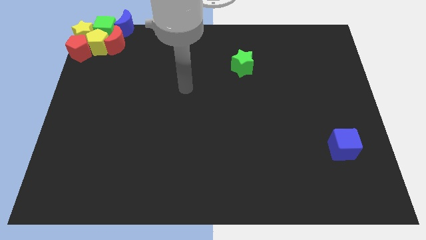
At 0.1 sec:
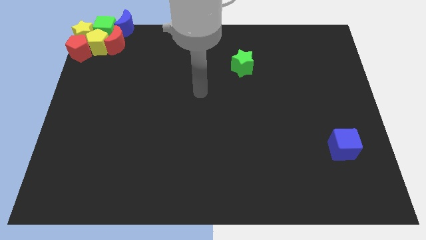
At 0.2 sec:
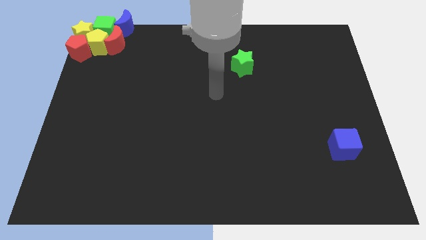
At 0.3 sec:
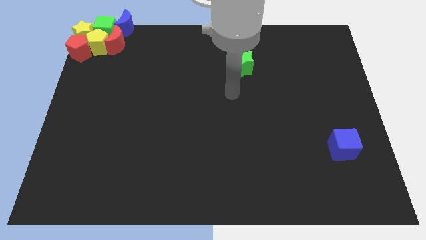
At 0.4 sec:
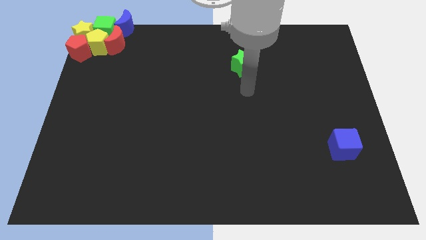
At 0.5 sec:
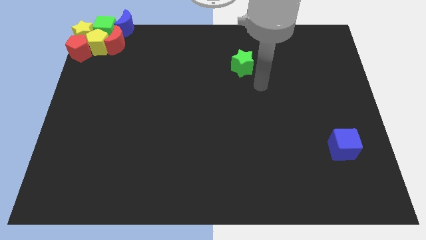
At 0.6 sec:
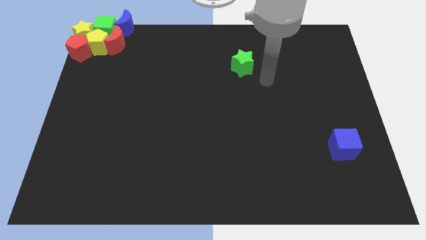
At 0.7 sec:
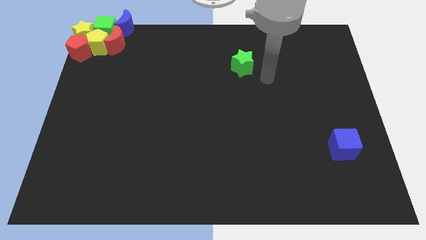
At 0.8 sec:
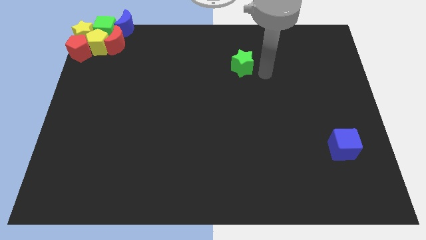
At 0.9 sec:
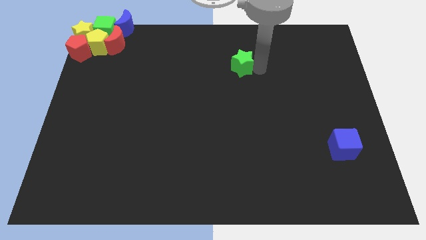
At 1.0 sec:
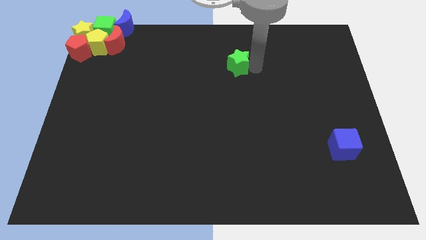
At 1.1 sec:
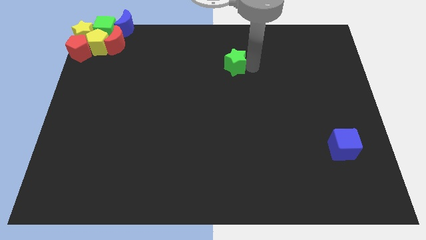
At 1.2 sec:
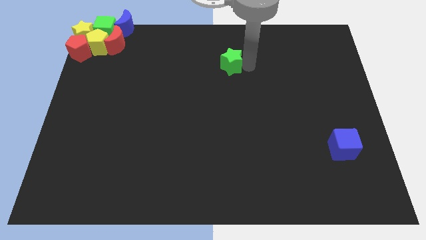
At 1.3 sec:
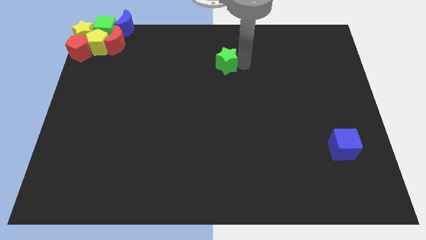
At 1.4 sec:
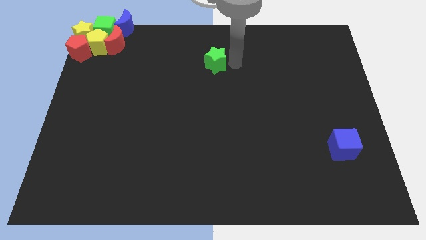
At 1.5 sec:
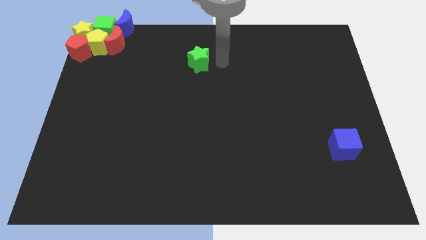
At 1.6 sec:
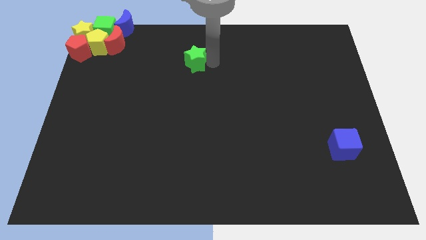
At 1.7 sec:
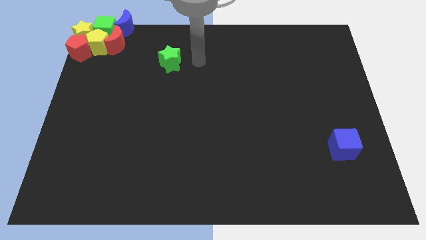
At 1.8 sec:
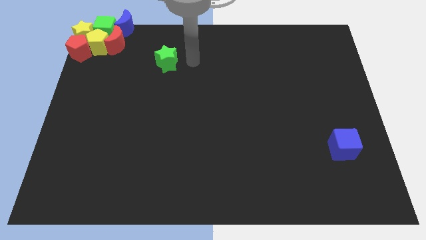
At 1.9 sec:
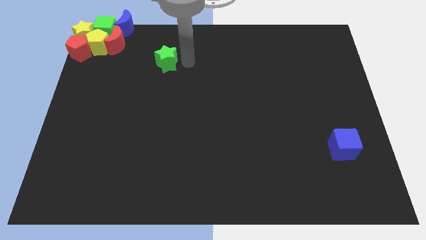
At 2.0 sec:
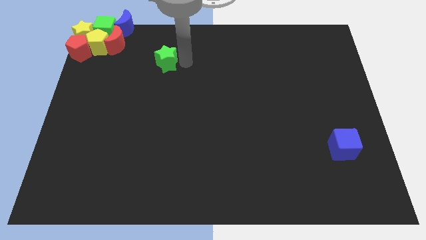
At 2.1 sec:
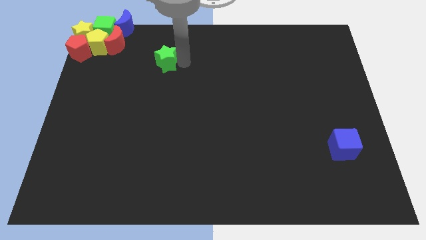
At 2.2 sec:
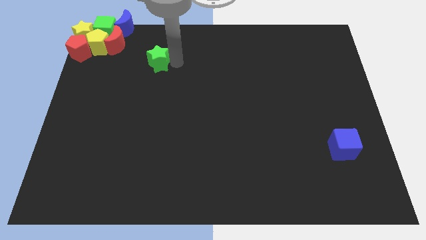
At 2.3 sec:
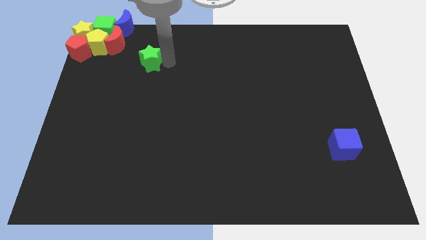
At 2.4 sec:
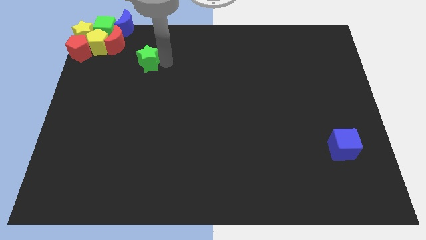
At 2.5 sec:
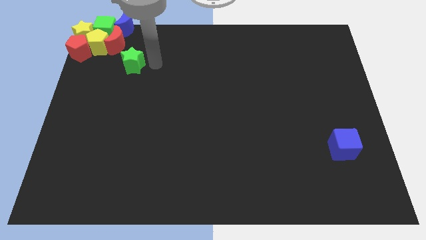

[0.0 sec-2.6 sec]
move the green star towards the left

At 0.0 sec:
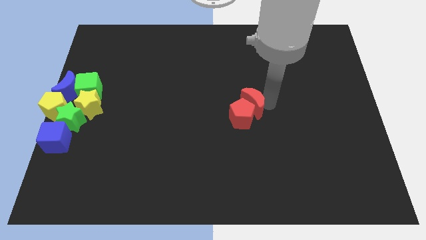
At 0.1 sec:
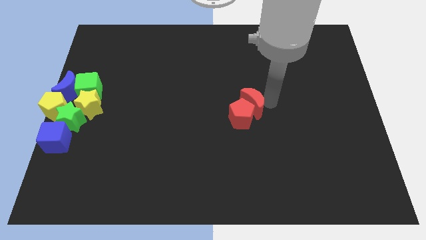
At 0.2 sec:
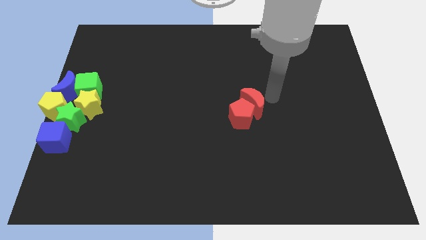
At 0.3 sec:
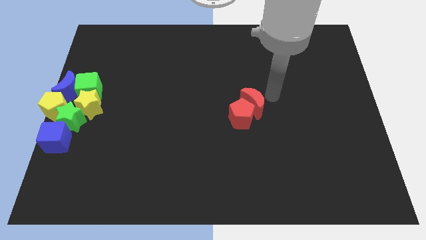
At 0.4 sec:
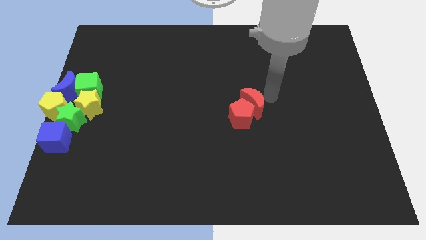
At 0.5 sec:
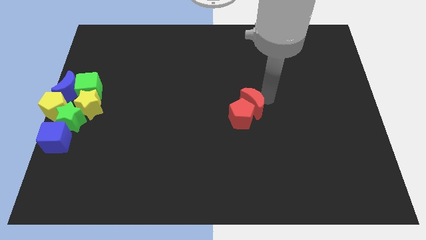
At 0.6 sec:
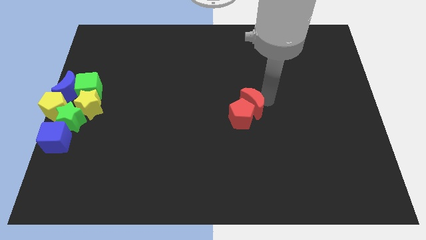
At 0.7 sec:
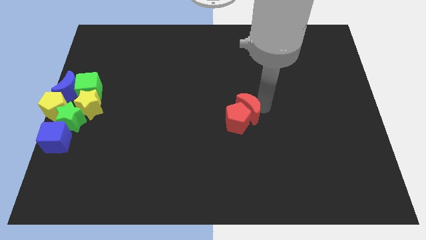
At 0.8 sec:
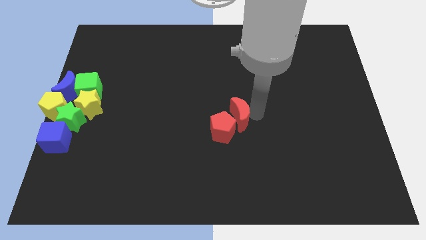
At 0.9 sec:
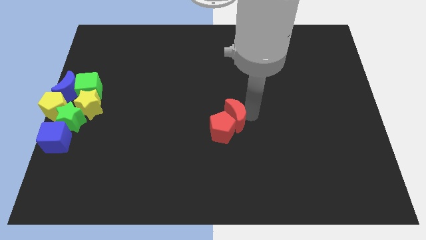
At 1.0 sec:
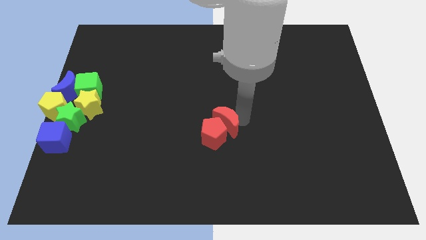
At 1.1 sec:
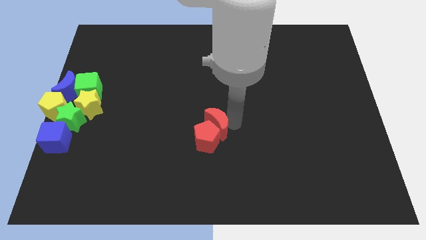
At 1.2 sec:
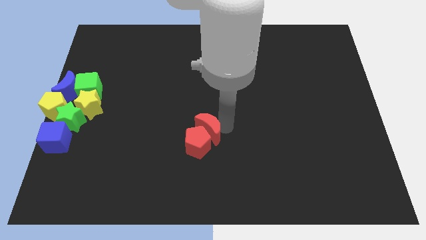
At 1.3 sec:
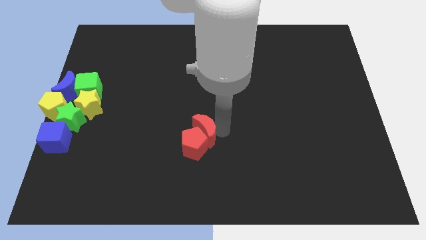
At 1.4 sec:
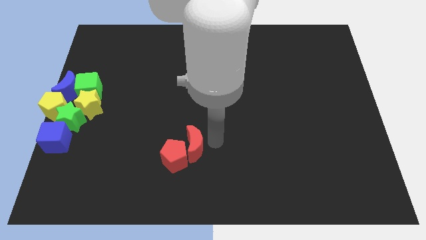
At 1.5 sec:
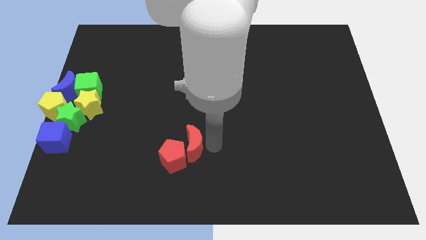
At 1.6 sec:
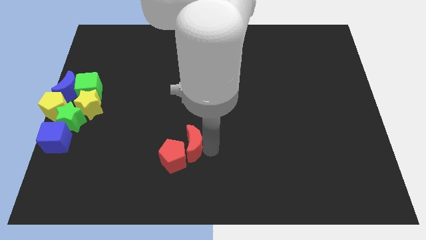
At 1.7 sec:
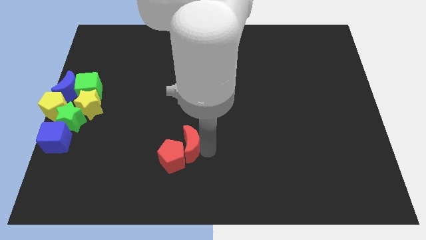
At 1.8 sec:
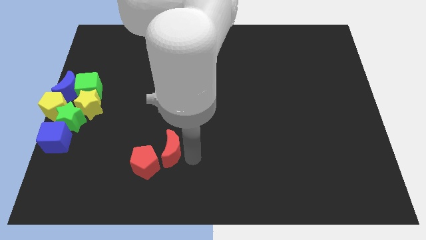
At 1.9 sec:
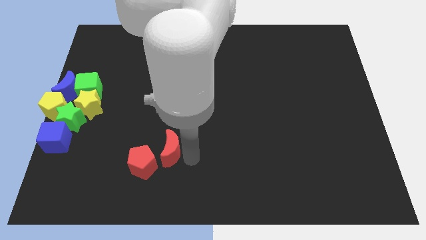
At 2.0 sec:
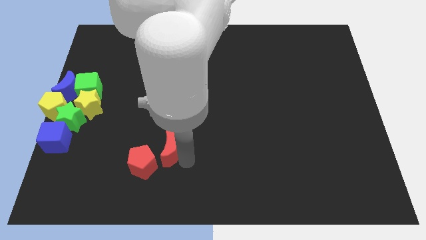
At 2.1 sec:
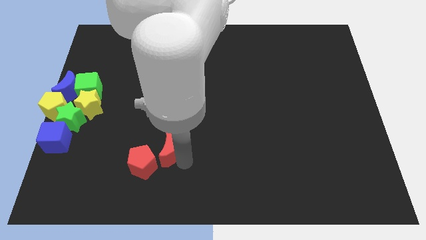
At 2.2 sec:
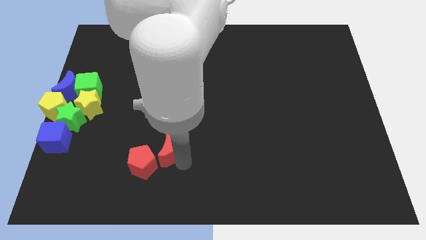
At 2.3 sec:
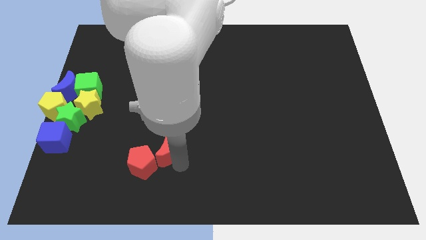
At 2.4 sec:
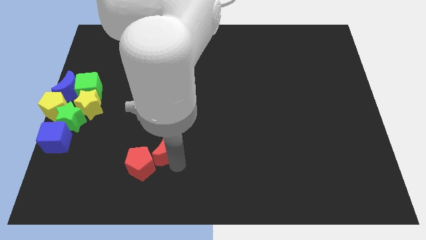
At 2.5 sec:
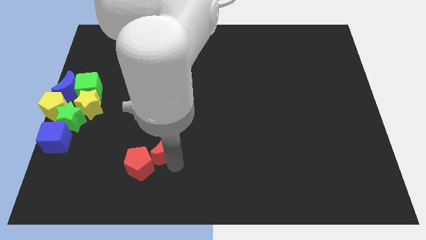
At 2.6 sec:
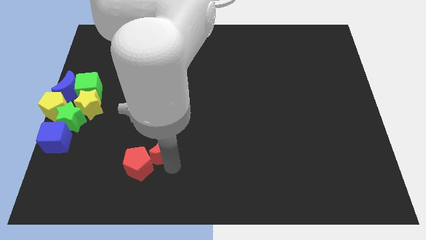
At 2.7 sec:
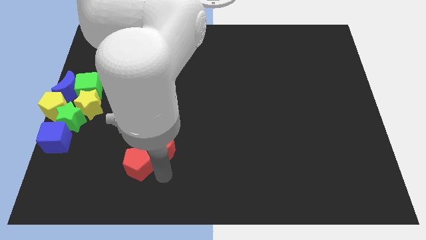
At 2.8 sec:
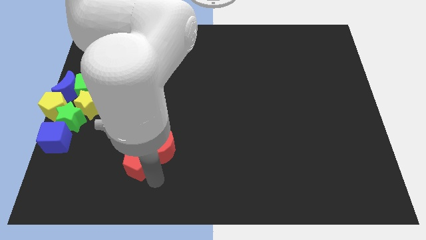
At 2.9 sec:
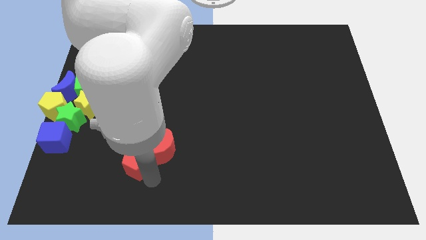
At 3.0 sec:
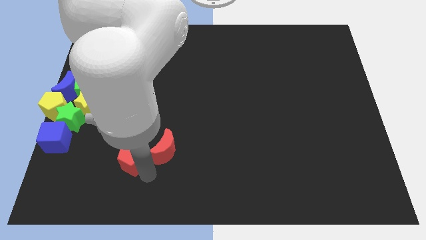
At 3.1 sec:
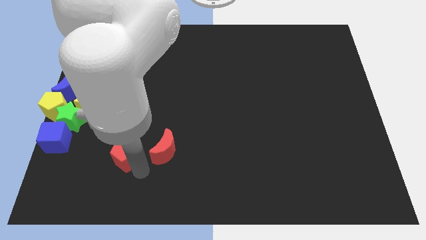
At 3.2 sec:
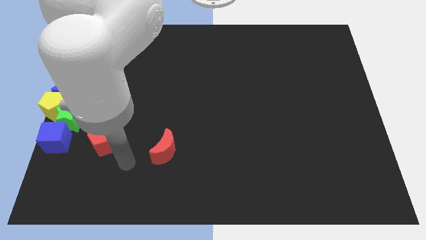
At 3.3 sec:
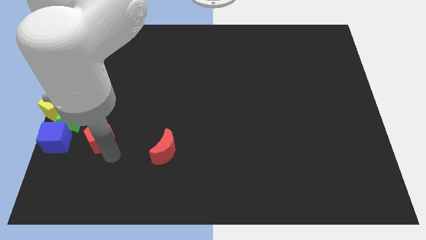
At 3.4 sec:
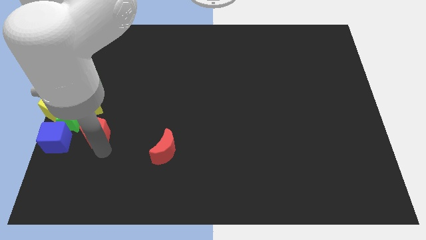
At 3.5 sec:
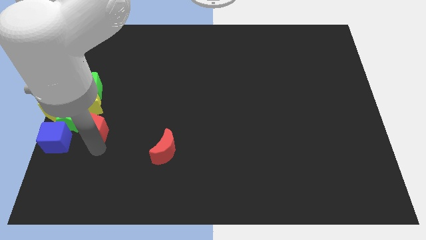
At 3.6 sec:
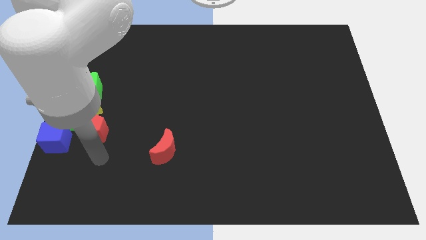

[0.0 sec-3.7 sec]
move the red pentagon into group of blocks

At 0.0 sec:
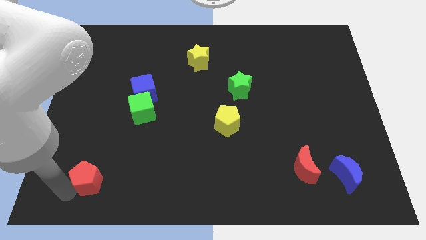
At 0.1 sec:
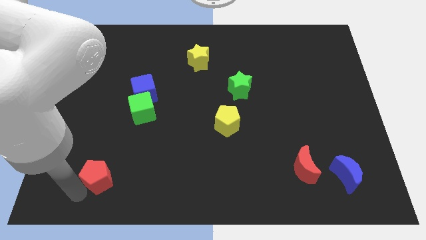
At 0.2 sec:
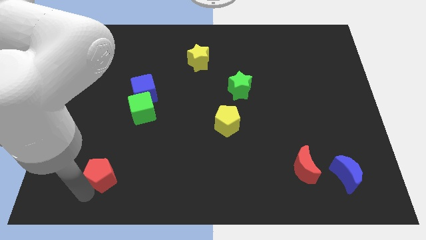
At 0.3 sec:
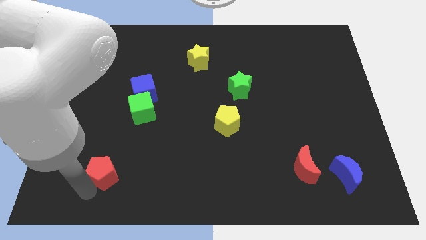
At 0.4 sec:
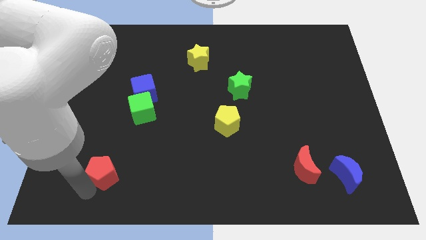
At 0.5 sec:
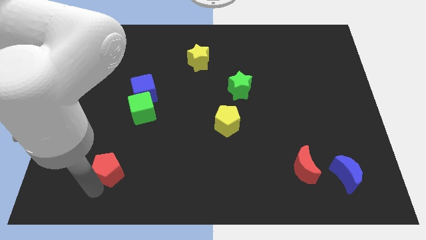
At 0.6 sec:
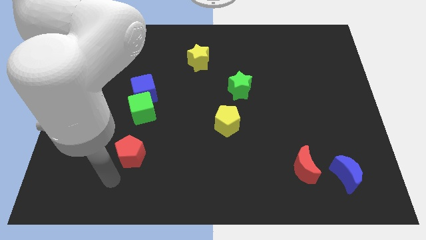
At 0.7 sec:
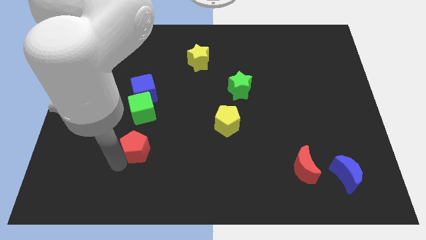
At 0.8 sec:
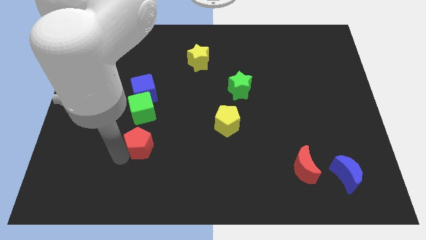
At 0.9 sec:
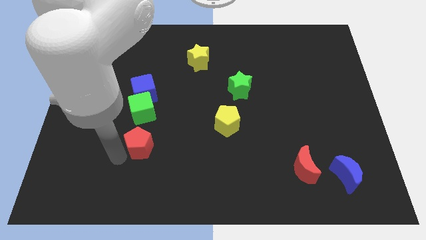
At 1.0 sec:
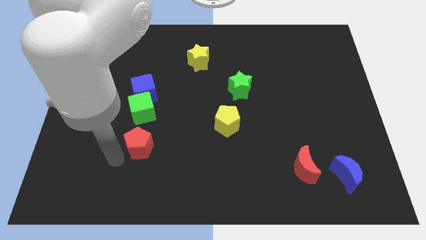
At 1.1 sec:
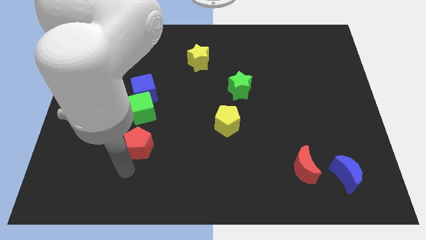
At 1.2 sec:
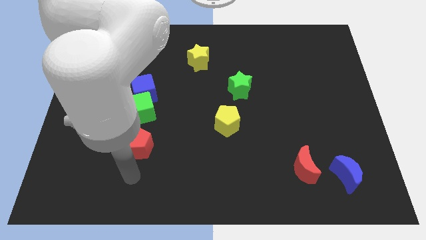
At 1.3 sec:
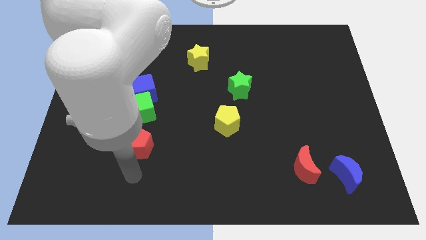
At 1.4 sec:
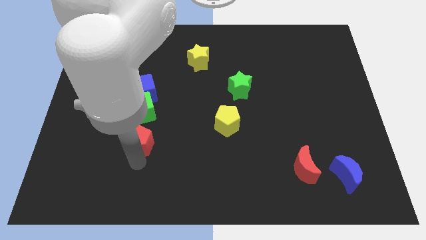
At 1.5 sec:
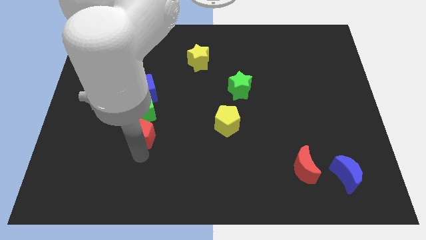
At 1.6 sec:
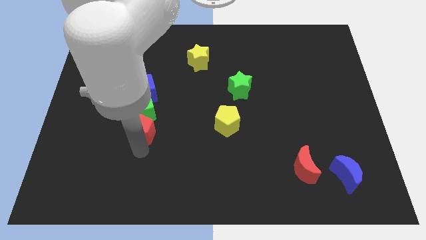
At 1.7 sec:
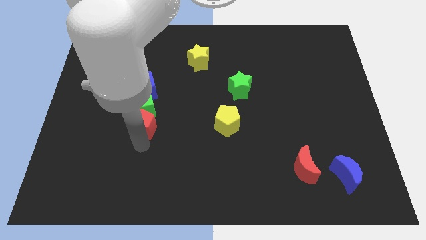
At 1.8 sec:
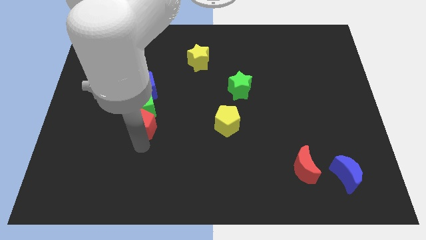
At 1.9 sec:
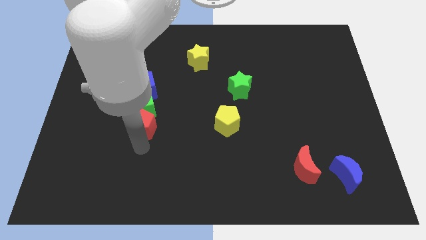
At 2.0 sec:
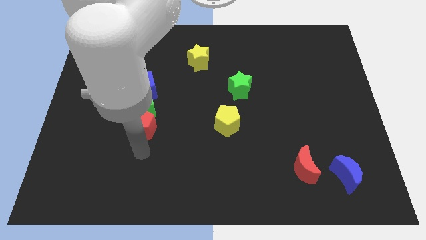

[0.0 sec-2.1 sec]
push red pentagon into green cube

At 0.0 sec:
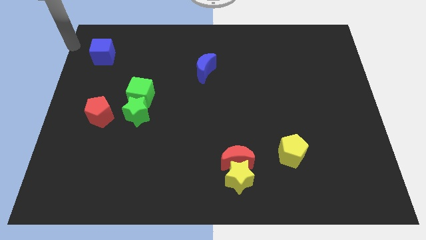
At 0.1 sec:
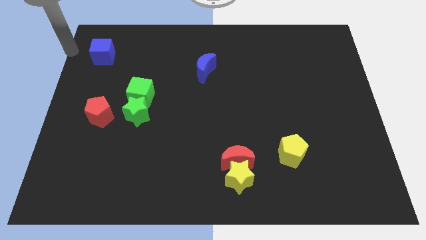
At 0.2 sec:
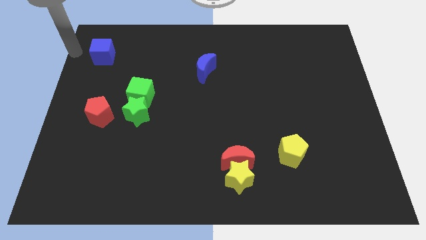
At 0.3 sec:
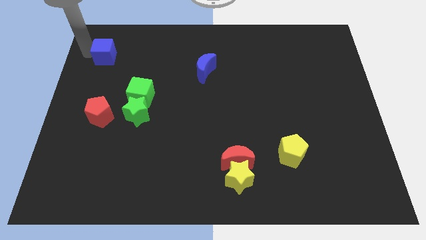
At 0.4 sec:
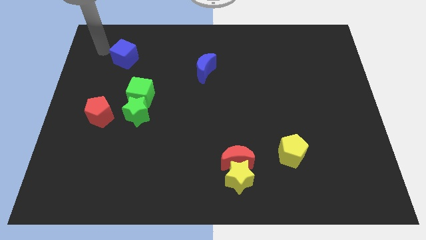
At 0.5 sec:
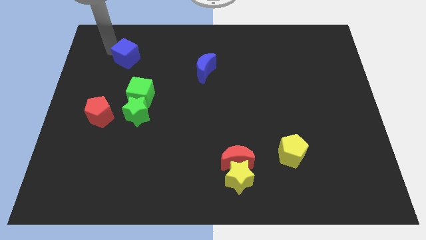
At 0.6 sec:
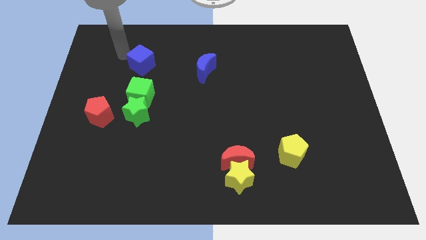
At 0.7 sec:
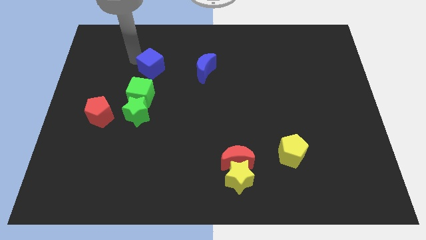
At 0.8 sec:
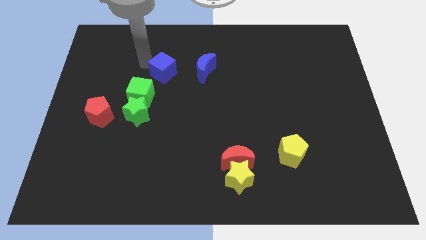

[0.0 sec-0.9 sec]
move the blue cube to the top of the green cube
